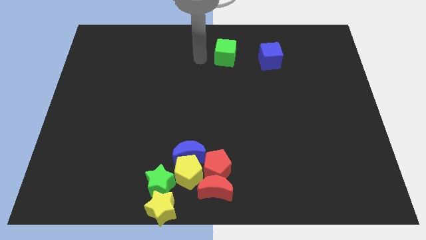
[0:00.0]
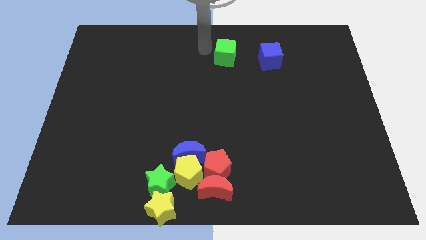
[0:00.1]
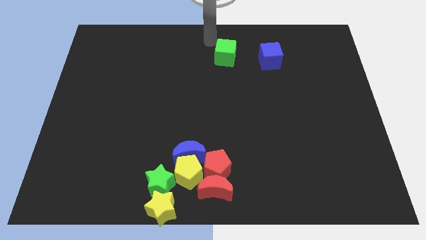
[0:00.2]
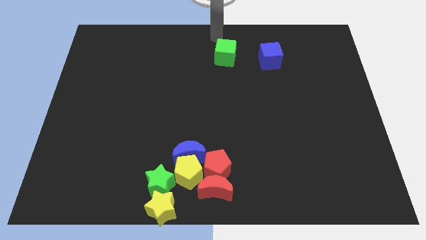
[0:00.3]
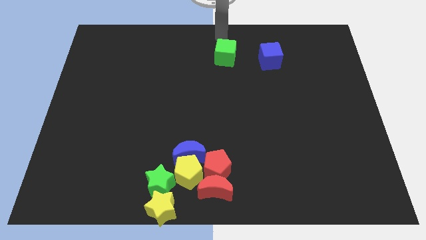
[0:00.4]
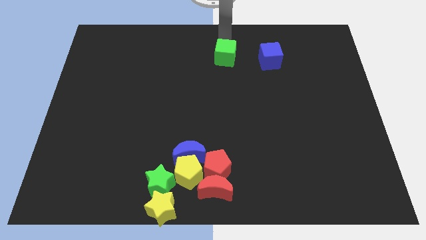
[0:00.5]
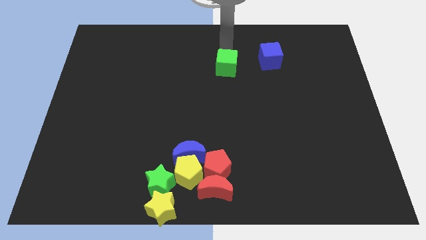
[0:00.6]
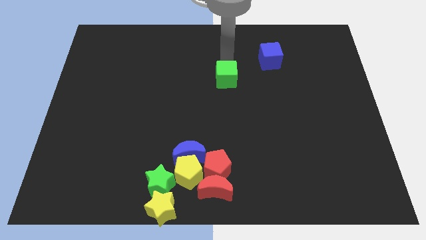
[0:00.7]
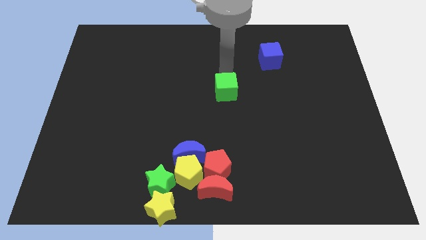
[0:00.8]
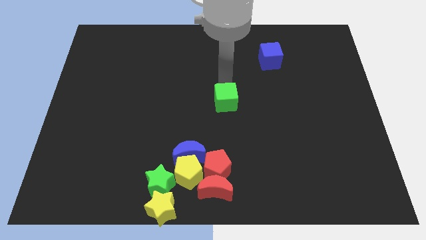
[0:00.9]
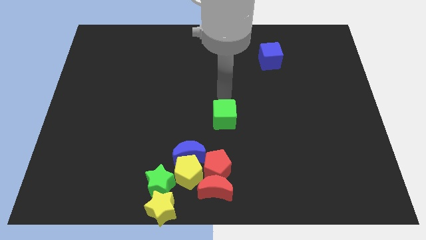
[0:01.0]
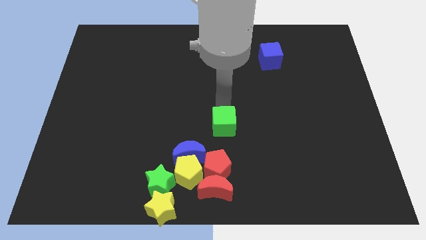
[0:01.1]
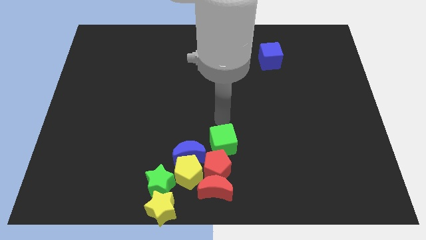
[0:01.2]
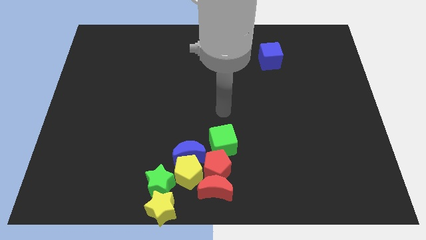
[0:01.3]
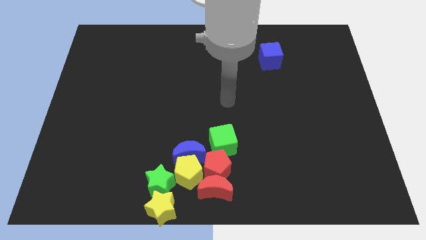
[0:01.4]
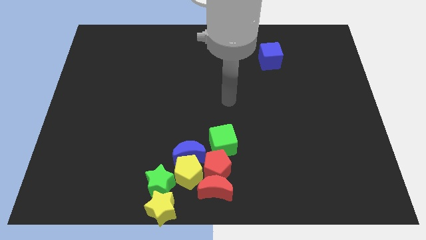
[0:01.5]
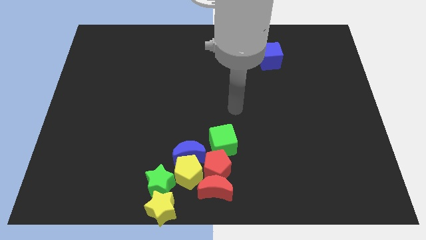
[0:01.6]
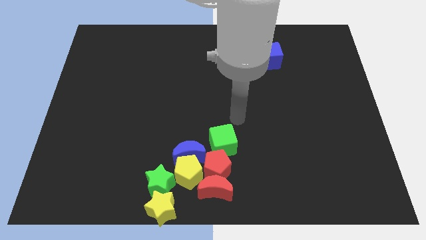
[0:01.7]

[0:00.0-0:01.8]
place the green cube to the top of red pentagon

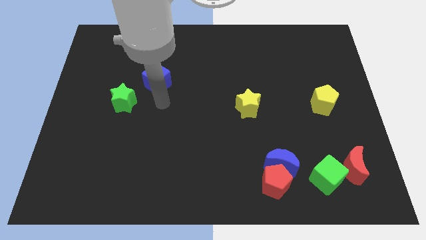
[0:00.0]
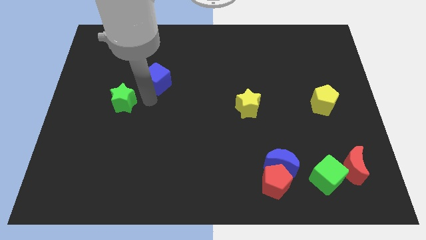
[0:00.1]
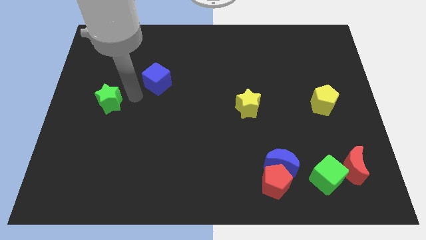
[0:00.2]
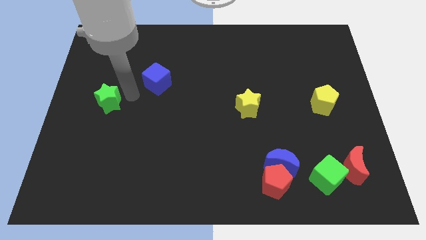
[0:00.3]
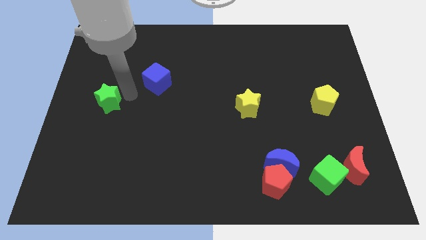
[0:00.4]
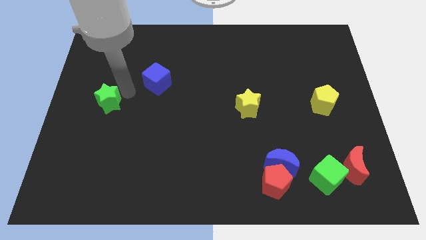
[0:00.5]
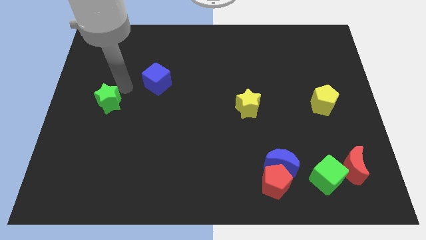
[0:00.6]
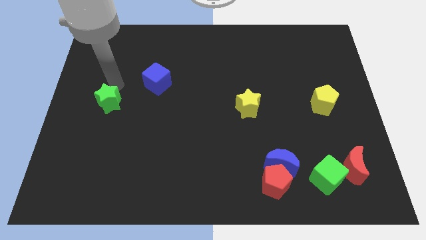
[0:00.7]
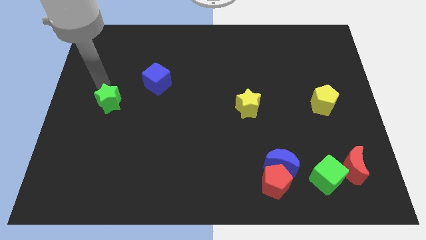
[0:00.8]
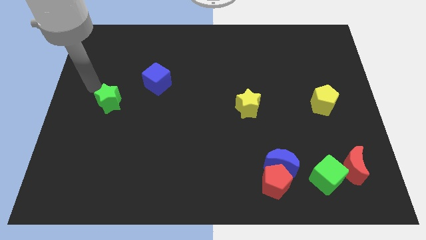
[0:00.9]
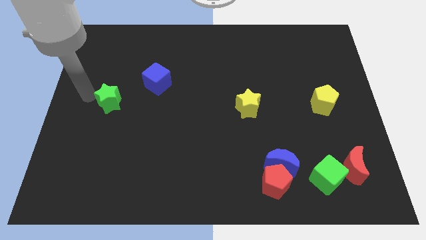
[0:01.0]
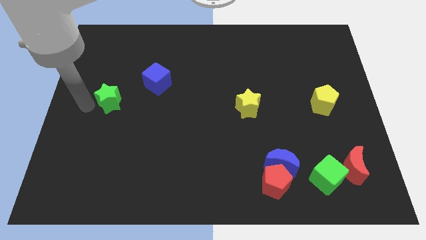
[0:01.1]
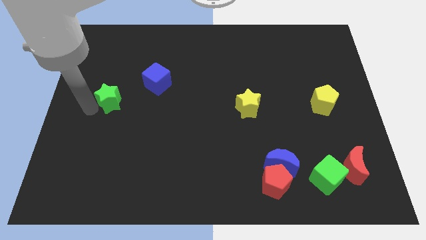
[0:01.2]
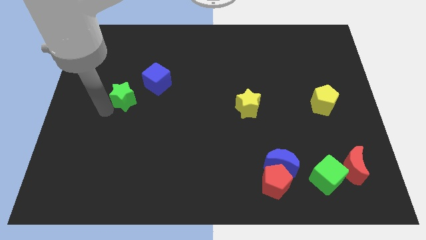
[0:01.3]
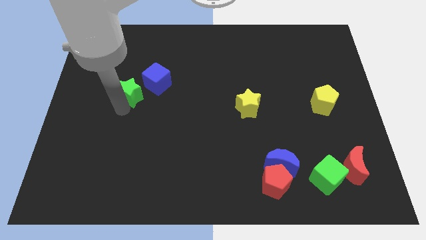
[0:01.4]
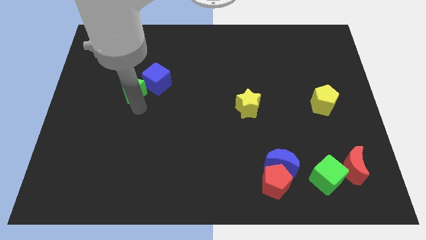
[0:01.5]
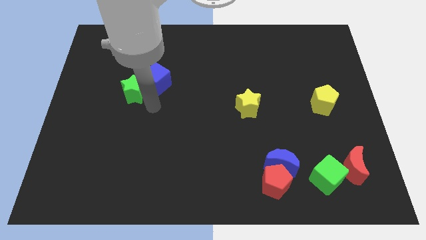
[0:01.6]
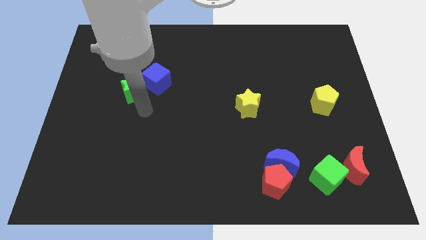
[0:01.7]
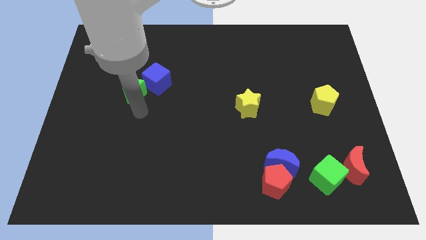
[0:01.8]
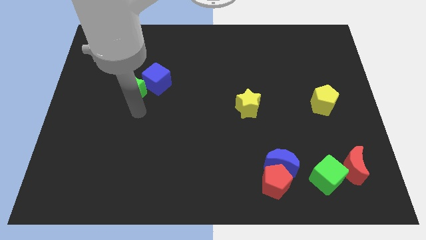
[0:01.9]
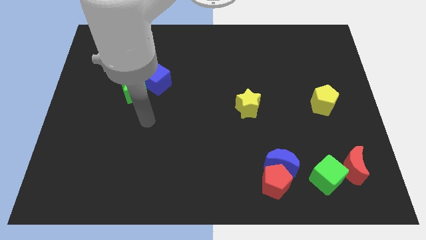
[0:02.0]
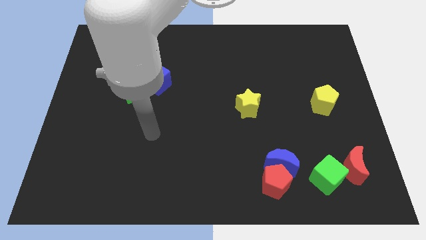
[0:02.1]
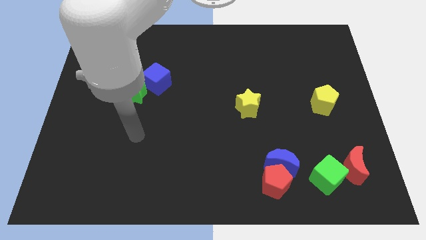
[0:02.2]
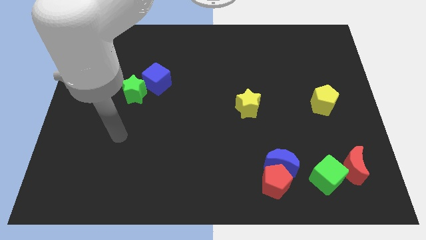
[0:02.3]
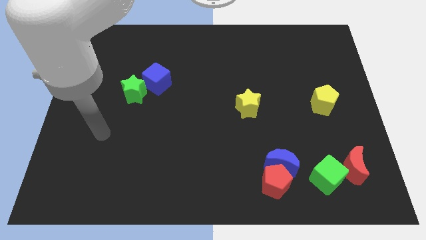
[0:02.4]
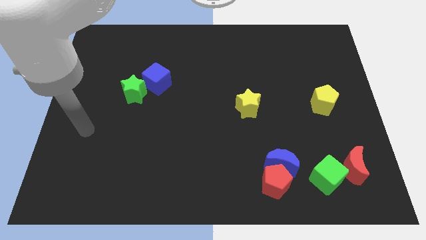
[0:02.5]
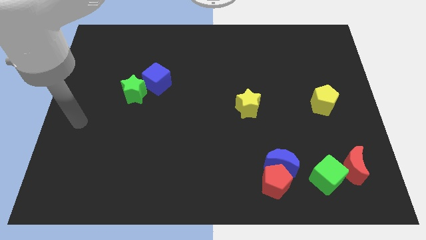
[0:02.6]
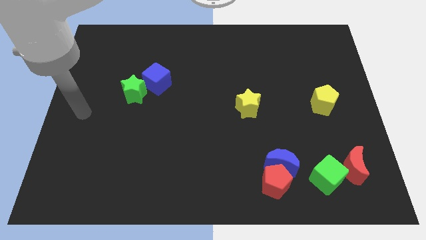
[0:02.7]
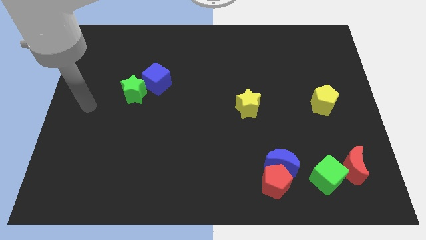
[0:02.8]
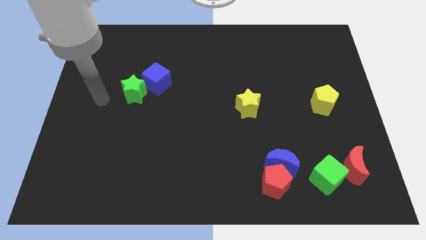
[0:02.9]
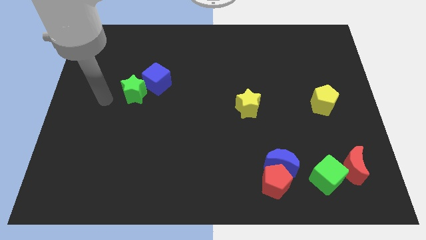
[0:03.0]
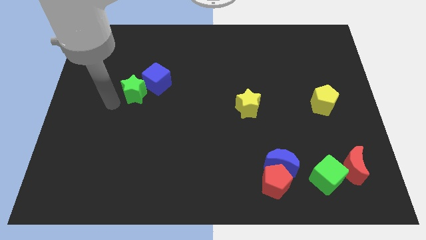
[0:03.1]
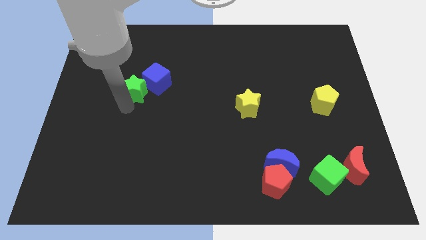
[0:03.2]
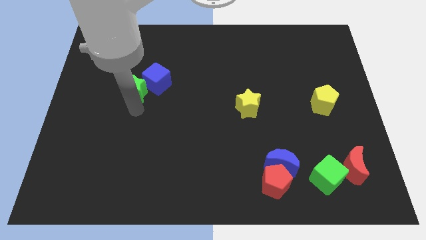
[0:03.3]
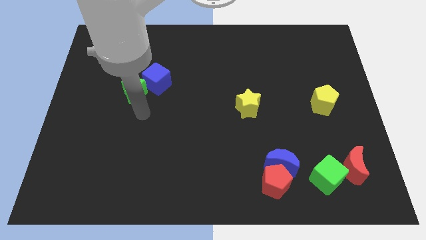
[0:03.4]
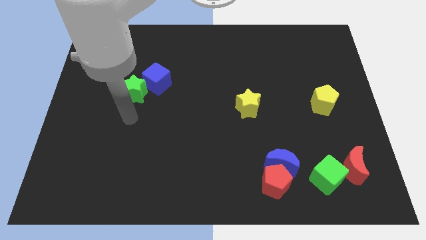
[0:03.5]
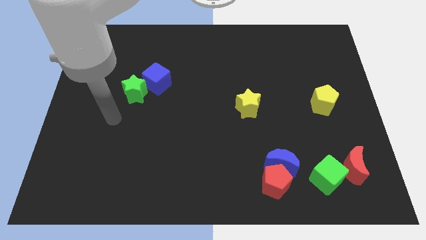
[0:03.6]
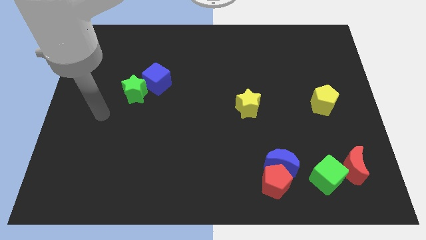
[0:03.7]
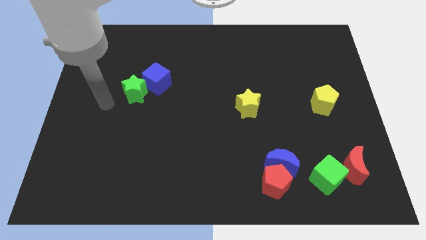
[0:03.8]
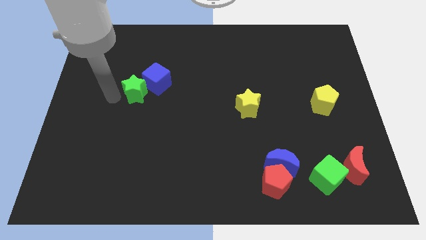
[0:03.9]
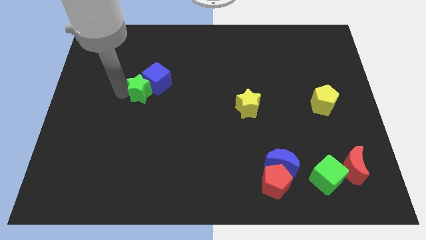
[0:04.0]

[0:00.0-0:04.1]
push the green star to the left of the blue cube

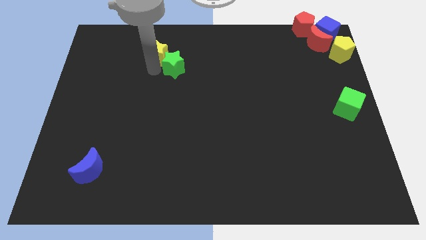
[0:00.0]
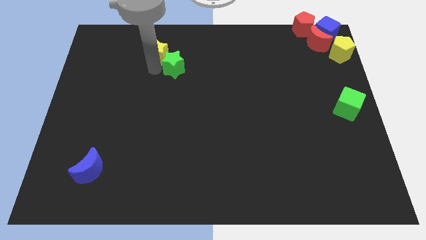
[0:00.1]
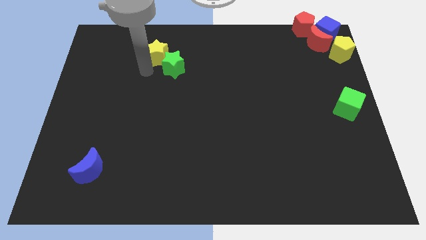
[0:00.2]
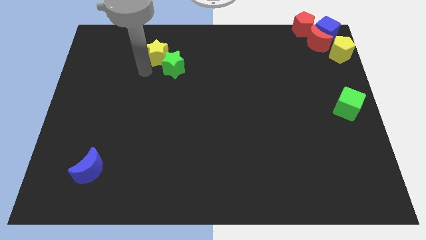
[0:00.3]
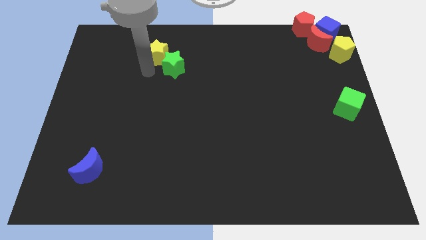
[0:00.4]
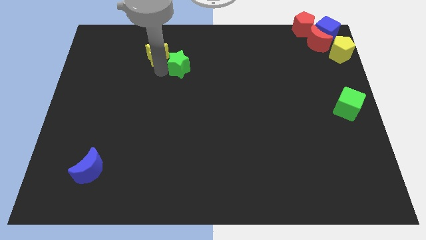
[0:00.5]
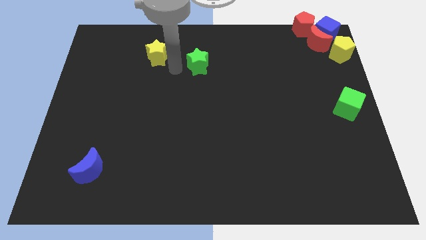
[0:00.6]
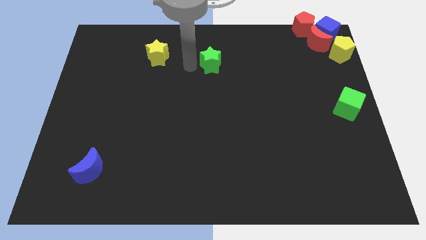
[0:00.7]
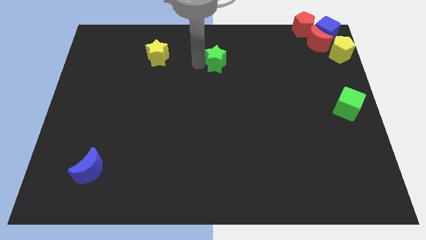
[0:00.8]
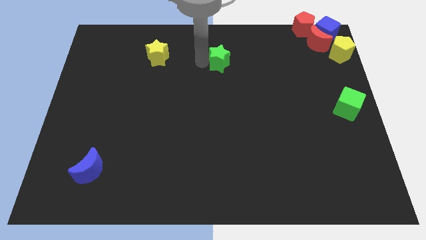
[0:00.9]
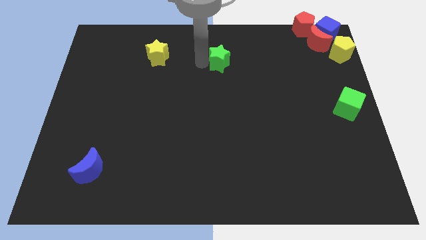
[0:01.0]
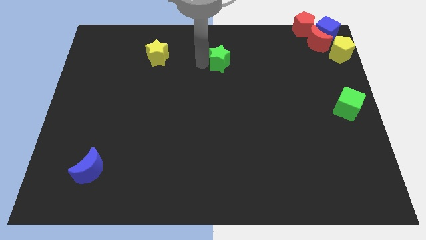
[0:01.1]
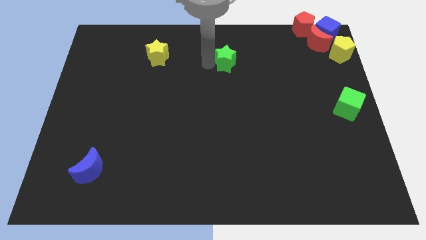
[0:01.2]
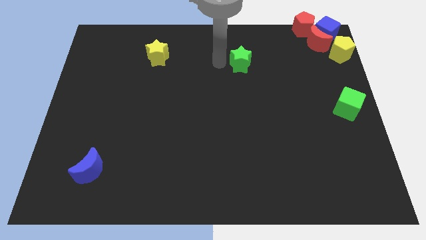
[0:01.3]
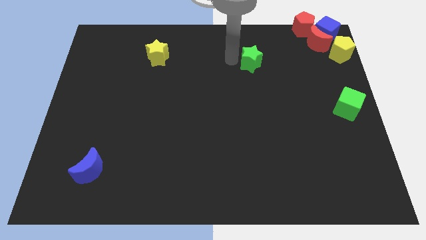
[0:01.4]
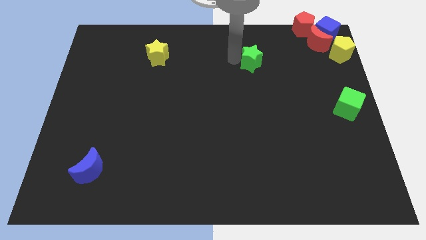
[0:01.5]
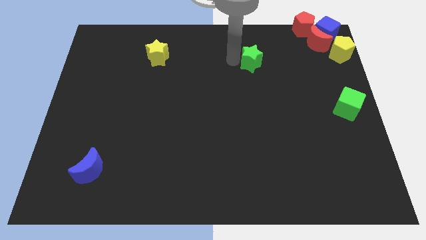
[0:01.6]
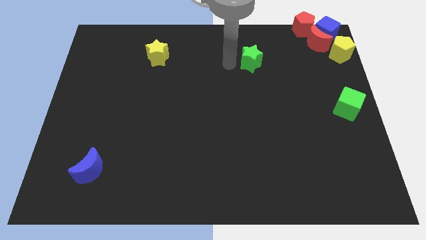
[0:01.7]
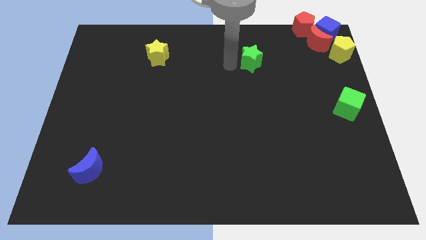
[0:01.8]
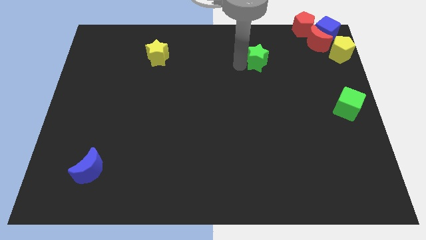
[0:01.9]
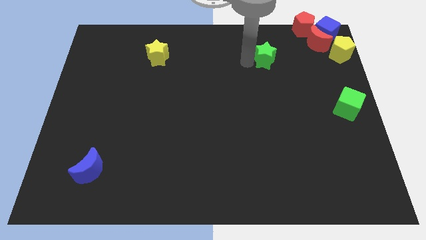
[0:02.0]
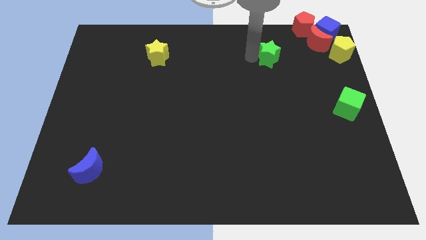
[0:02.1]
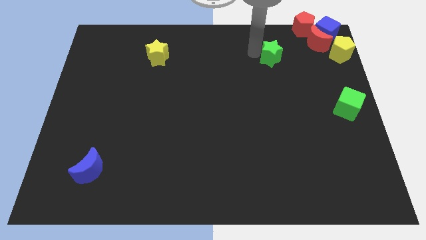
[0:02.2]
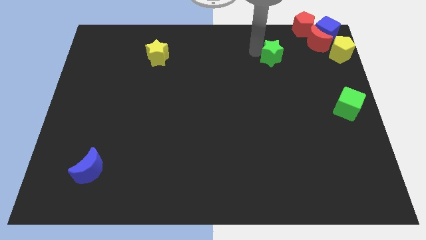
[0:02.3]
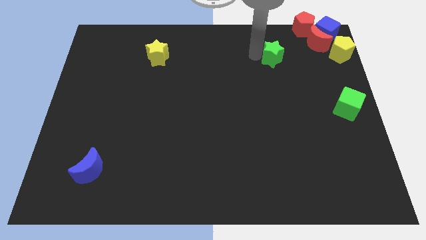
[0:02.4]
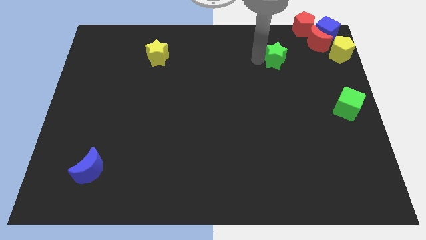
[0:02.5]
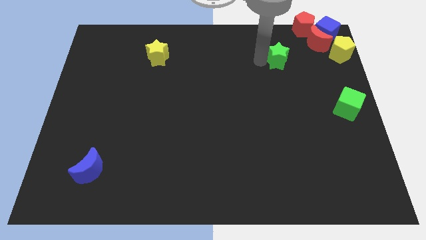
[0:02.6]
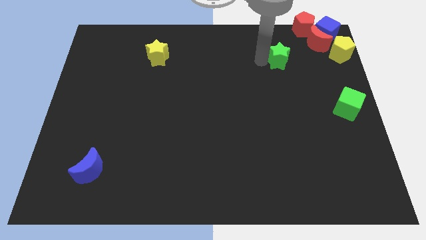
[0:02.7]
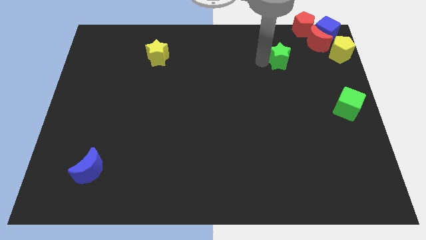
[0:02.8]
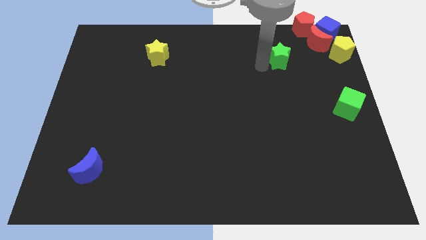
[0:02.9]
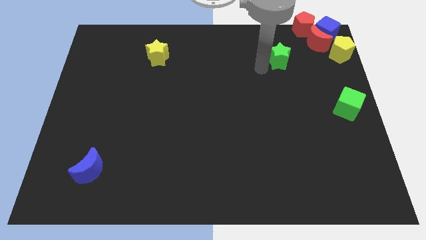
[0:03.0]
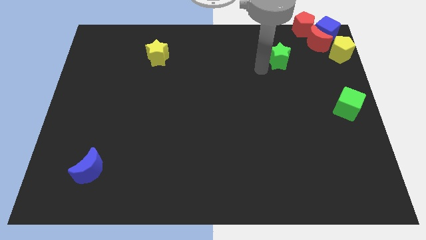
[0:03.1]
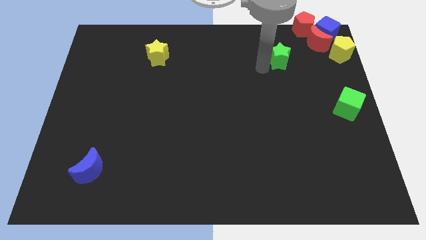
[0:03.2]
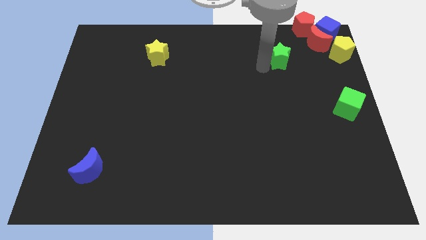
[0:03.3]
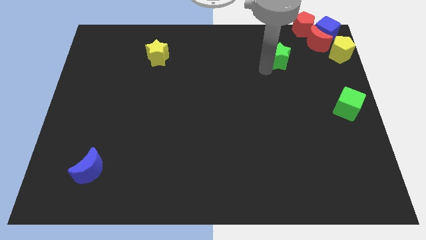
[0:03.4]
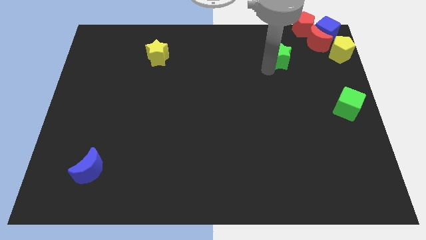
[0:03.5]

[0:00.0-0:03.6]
place the green star below the red moon
